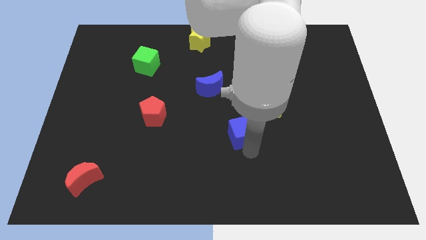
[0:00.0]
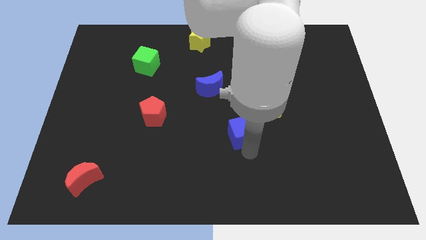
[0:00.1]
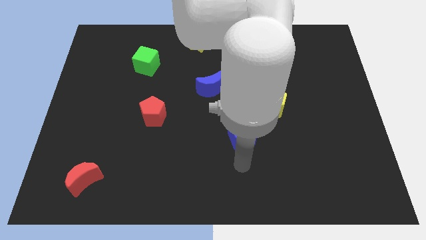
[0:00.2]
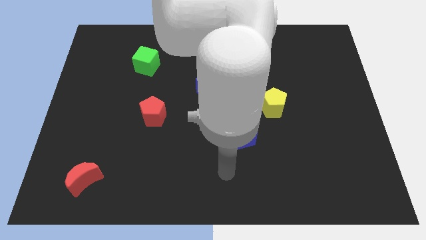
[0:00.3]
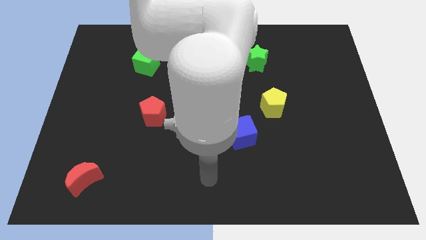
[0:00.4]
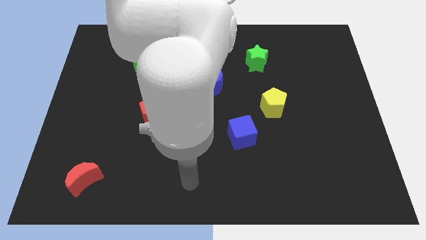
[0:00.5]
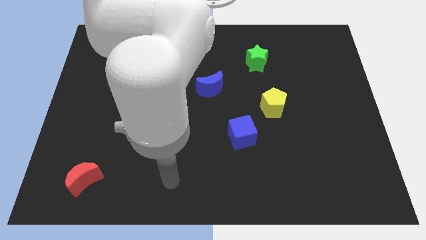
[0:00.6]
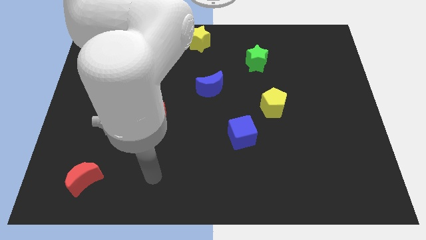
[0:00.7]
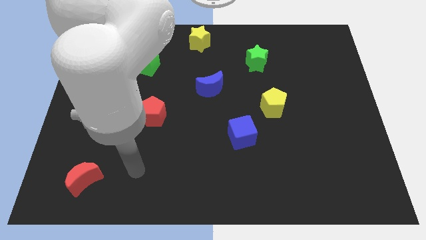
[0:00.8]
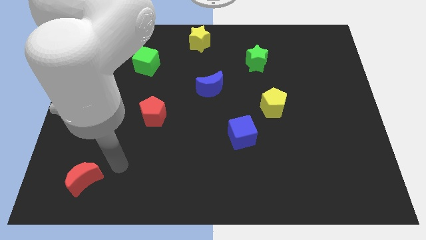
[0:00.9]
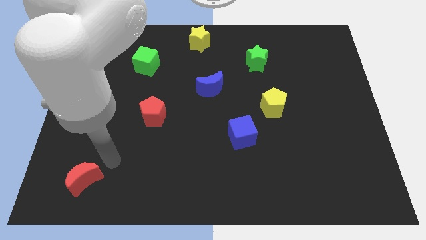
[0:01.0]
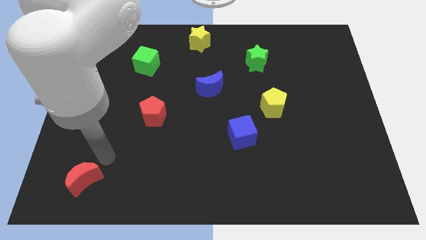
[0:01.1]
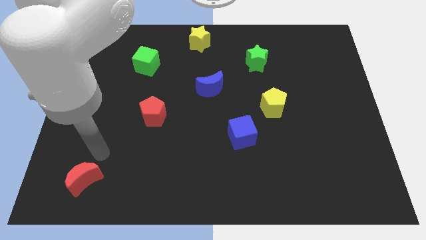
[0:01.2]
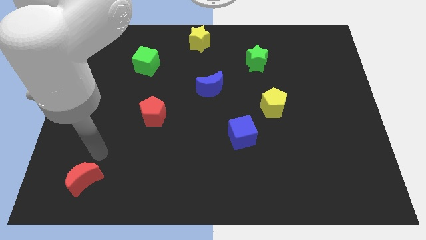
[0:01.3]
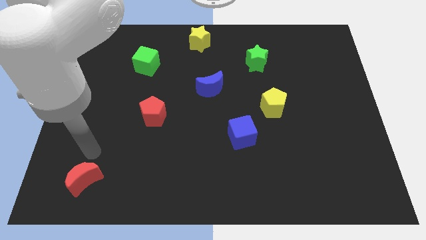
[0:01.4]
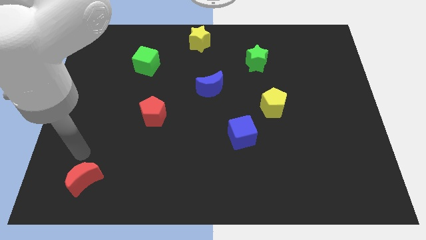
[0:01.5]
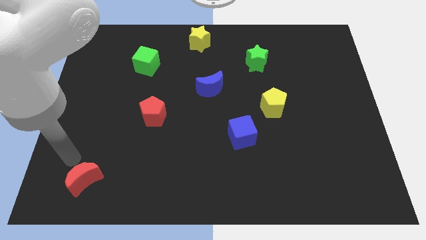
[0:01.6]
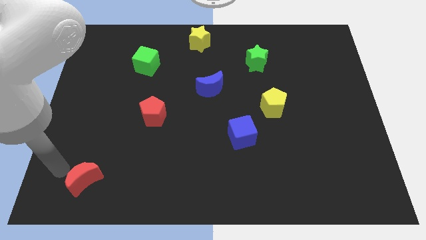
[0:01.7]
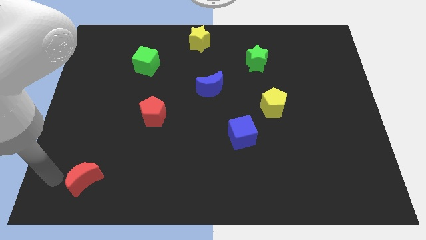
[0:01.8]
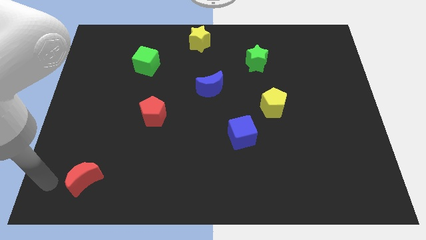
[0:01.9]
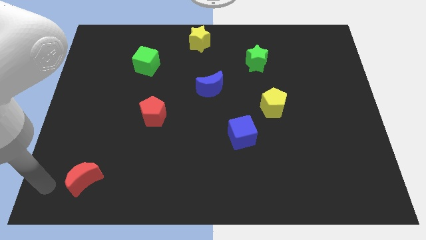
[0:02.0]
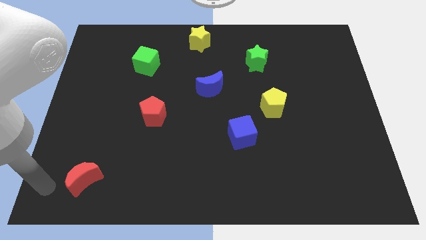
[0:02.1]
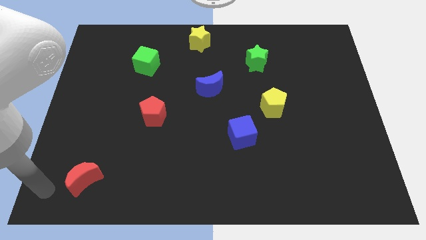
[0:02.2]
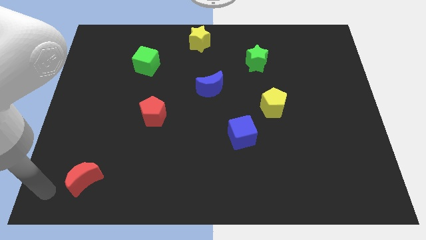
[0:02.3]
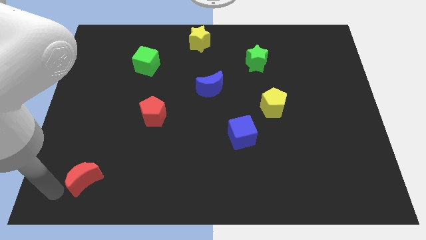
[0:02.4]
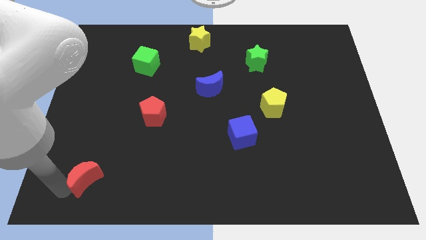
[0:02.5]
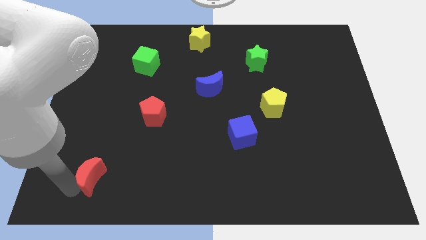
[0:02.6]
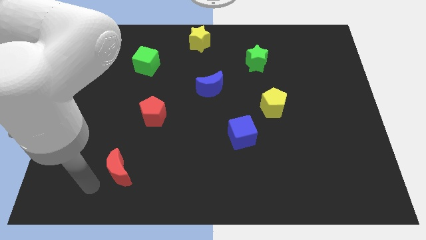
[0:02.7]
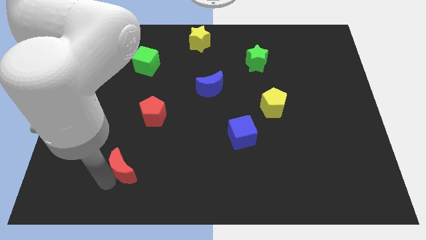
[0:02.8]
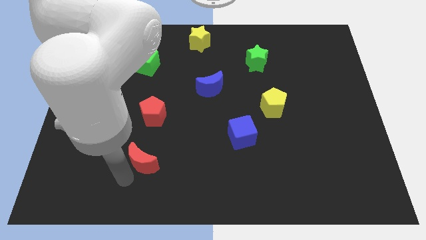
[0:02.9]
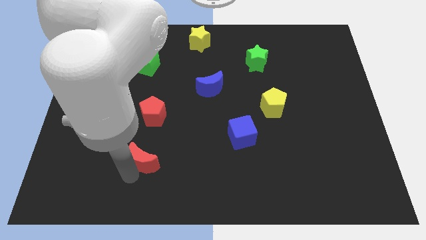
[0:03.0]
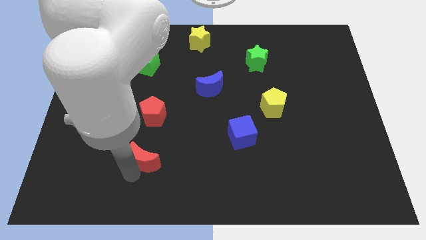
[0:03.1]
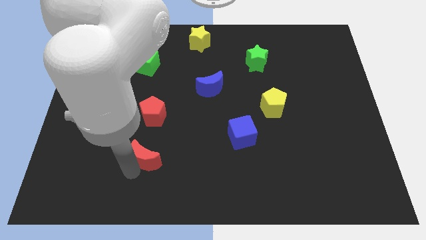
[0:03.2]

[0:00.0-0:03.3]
place the red crescent at the bottom of red pentagon

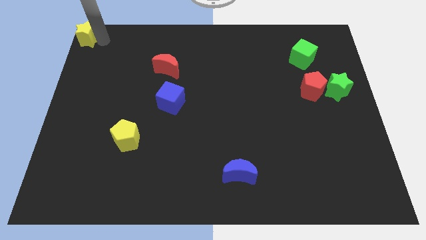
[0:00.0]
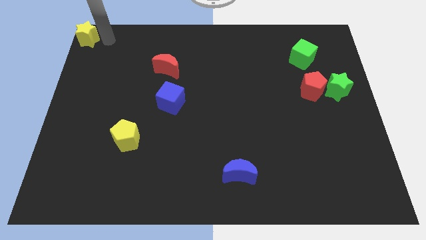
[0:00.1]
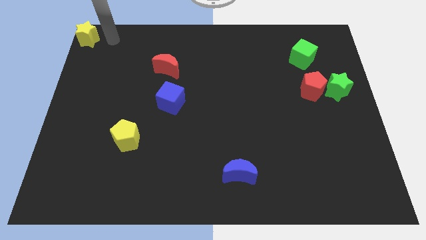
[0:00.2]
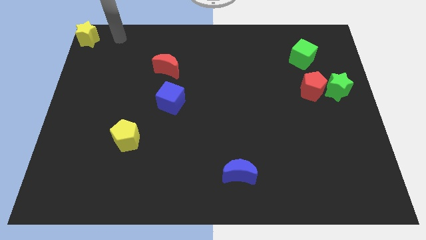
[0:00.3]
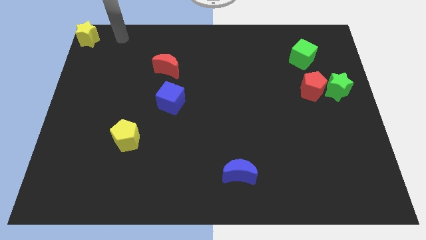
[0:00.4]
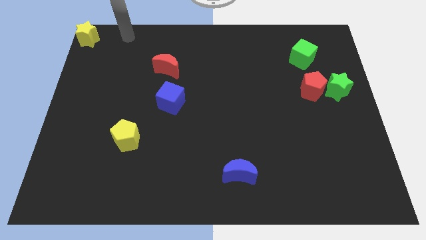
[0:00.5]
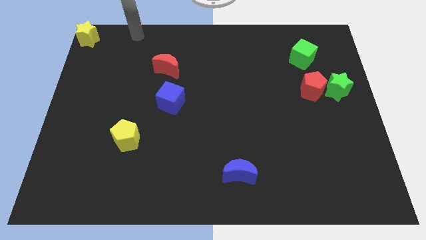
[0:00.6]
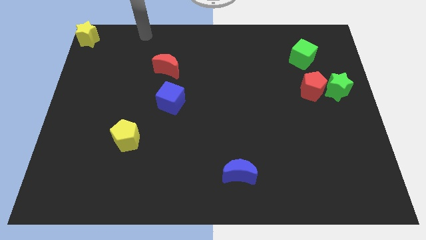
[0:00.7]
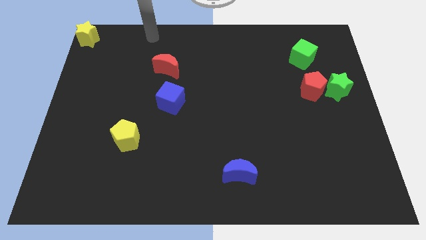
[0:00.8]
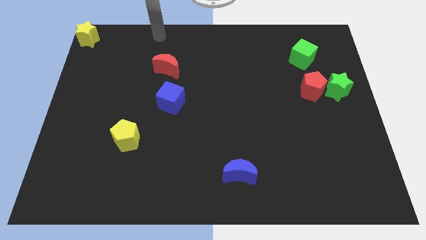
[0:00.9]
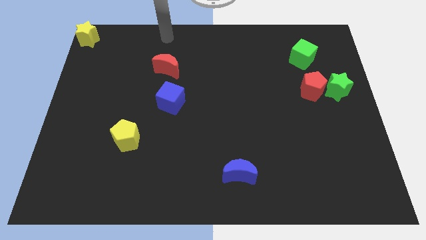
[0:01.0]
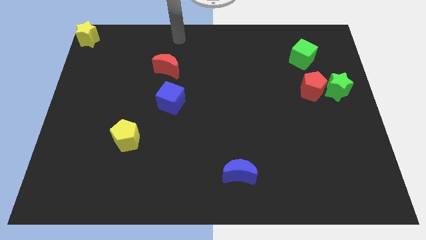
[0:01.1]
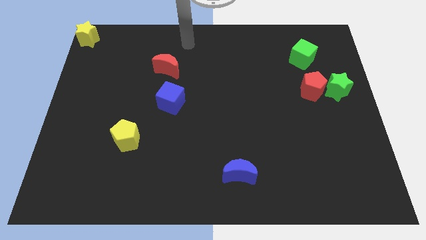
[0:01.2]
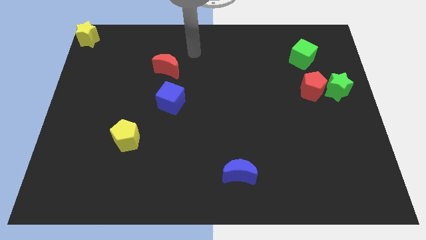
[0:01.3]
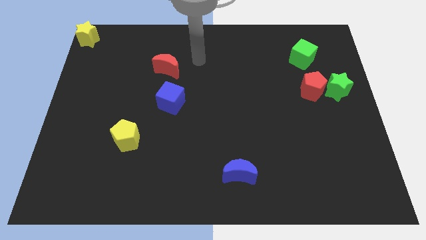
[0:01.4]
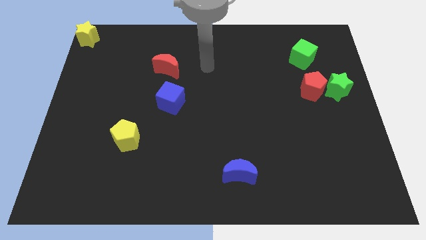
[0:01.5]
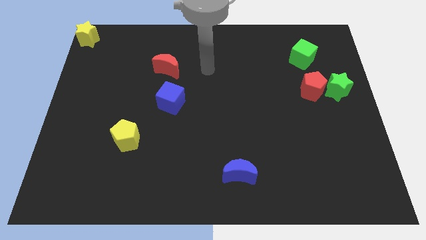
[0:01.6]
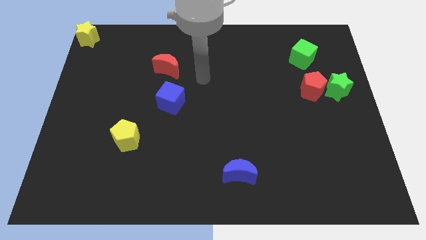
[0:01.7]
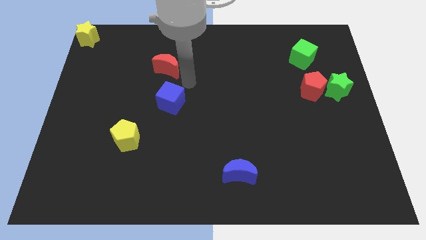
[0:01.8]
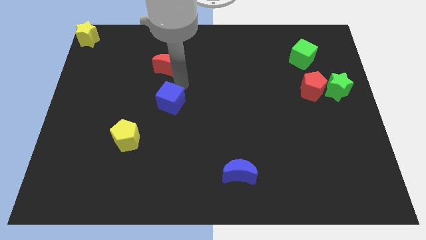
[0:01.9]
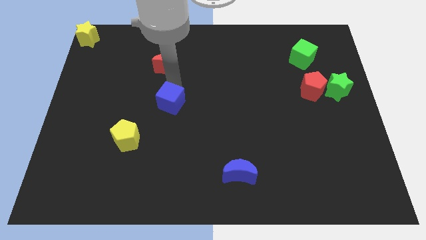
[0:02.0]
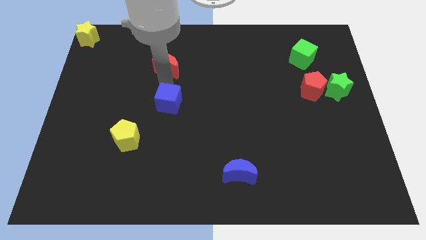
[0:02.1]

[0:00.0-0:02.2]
point your arm at the top of blue cube

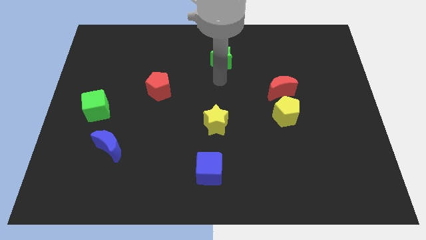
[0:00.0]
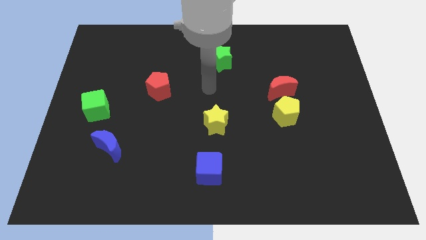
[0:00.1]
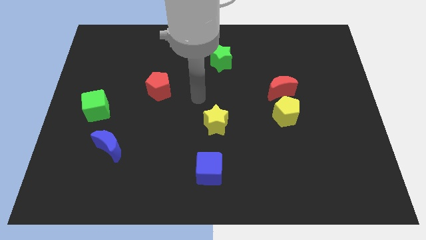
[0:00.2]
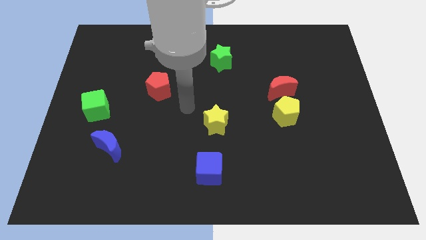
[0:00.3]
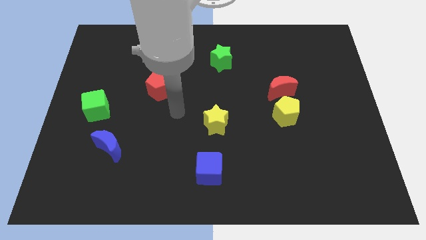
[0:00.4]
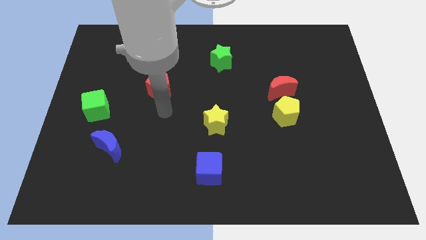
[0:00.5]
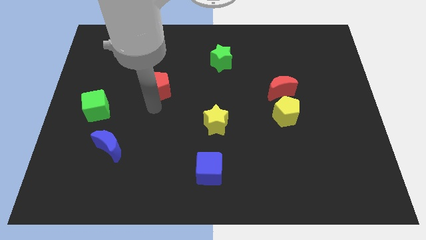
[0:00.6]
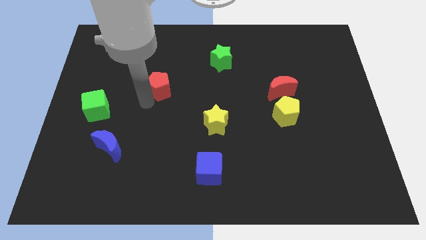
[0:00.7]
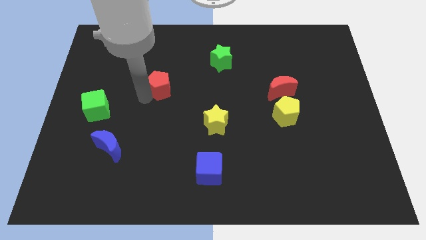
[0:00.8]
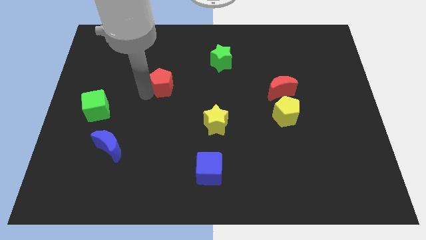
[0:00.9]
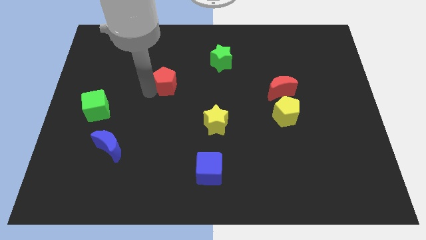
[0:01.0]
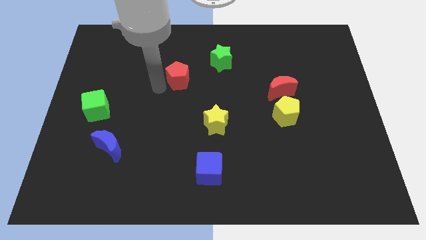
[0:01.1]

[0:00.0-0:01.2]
move your arm away from the green star

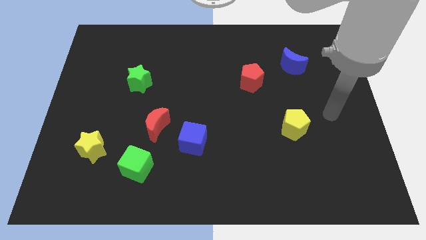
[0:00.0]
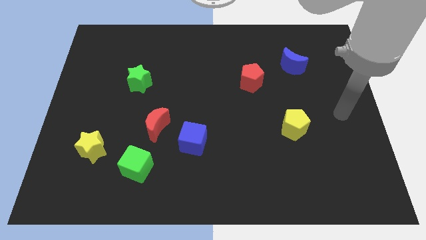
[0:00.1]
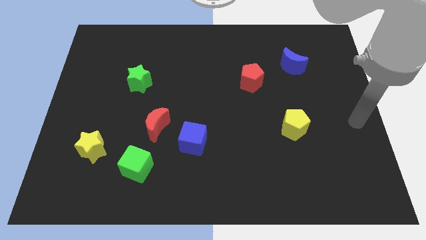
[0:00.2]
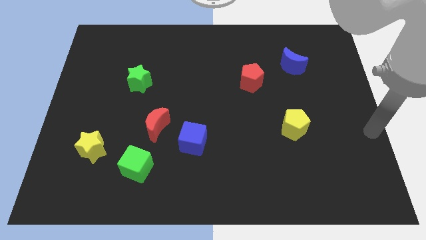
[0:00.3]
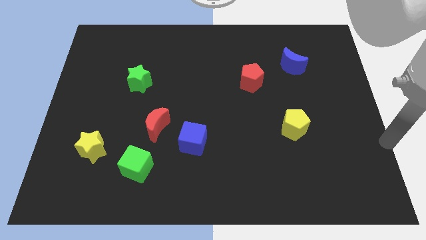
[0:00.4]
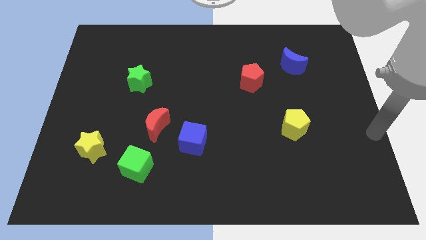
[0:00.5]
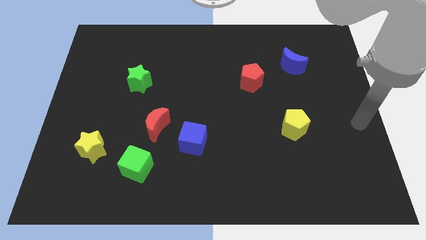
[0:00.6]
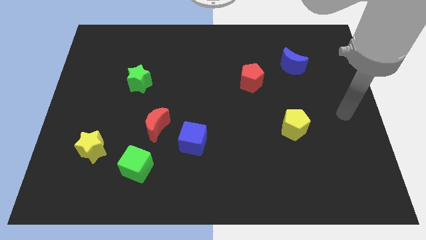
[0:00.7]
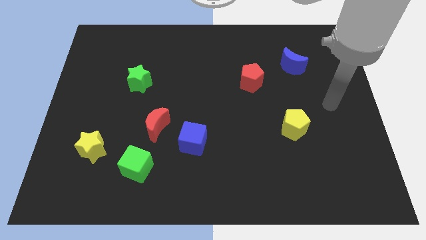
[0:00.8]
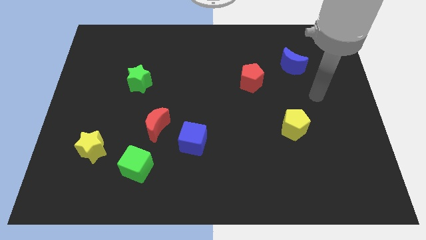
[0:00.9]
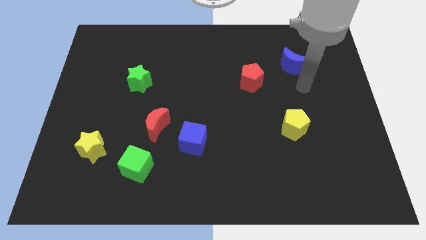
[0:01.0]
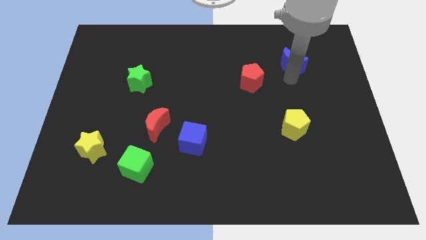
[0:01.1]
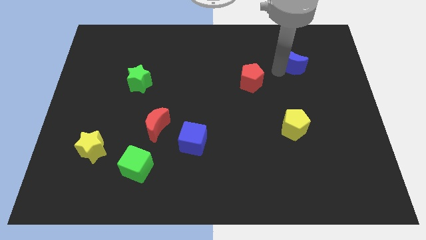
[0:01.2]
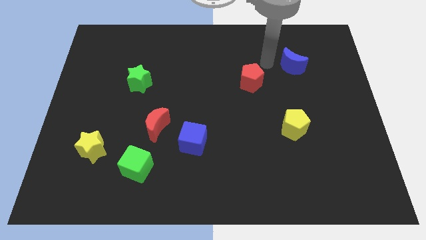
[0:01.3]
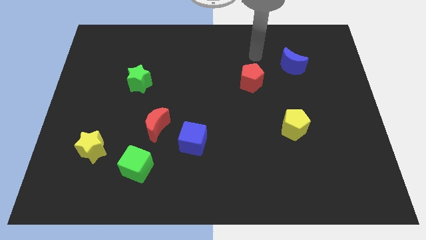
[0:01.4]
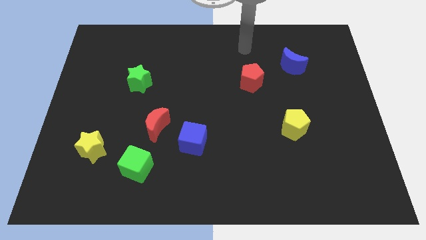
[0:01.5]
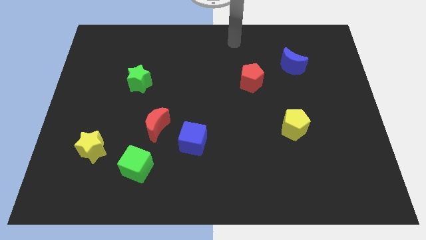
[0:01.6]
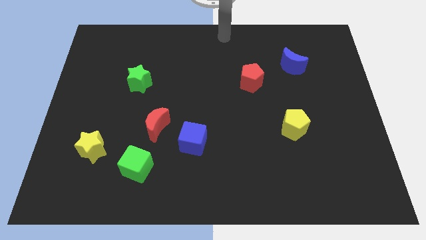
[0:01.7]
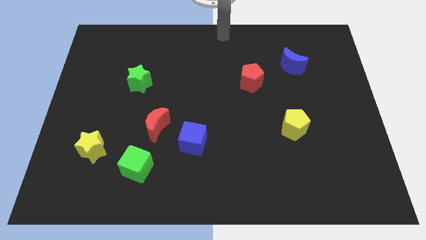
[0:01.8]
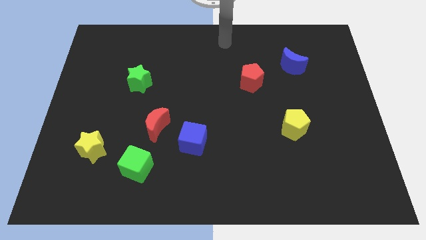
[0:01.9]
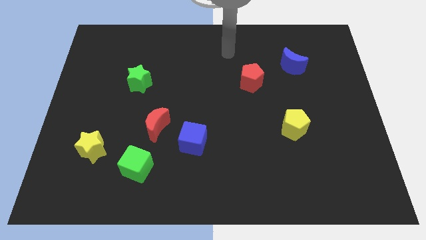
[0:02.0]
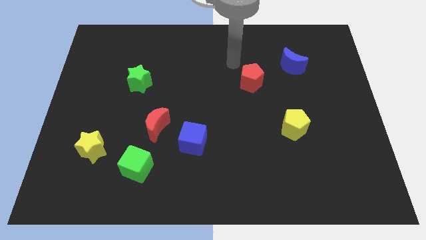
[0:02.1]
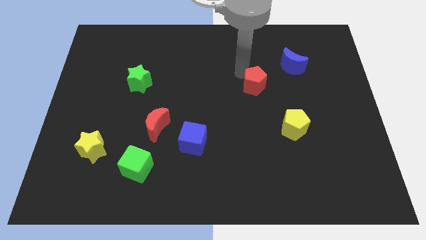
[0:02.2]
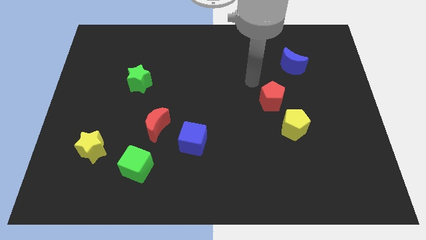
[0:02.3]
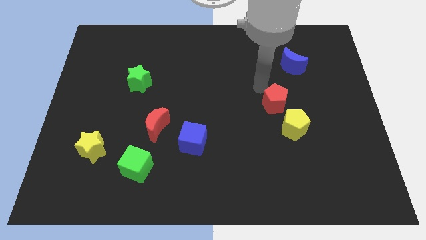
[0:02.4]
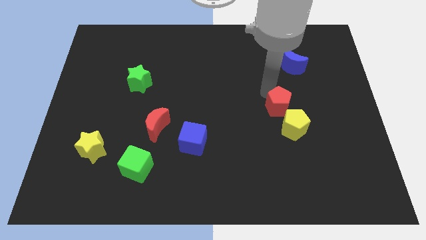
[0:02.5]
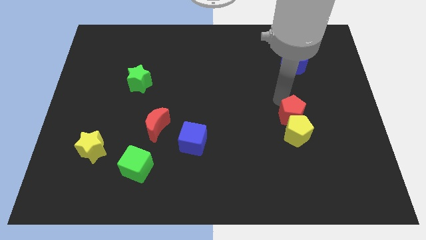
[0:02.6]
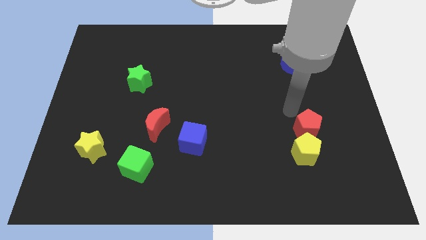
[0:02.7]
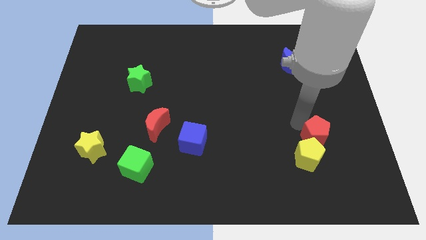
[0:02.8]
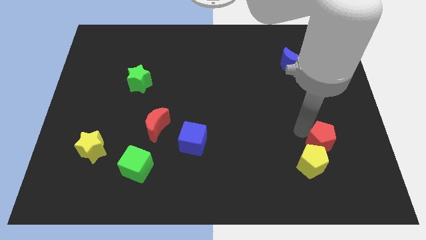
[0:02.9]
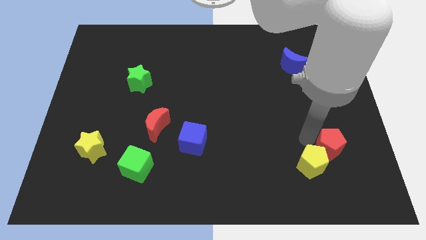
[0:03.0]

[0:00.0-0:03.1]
push the red pentagon to the top right of the yellow pentagon
